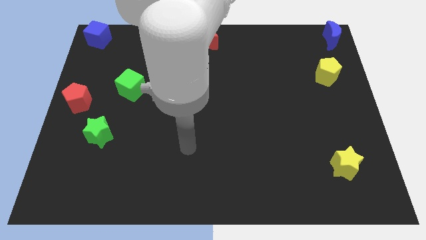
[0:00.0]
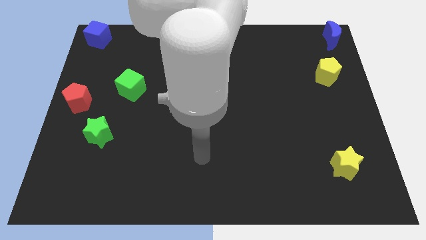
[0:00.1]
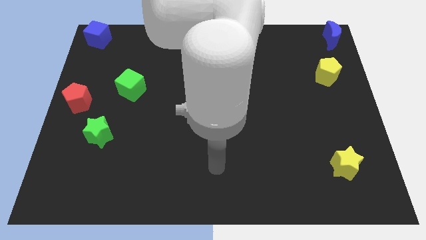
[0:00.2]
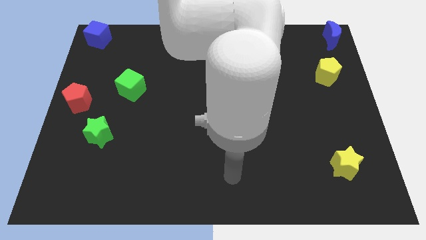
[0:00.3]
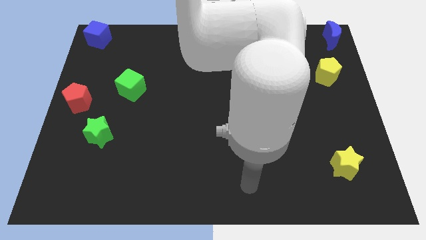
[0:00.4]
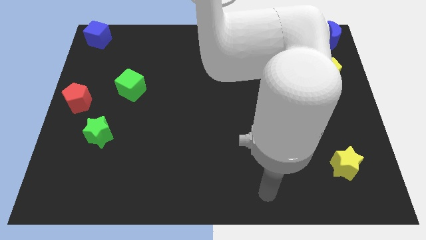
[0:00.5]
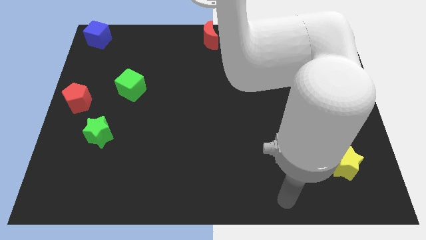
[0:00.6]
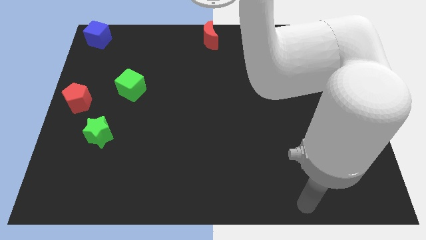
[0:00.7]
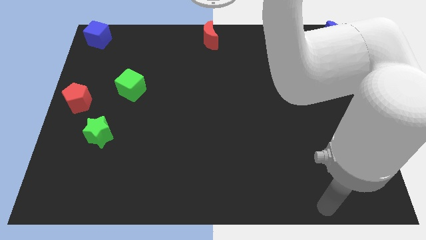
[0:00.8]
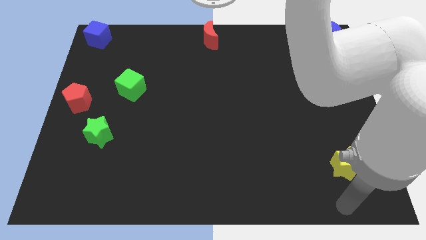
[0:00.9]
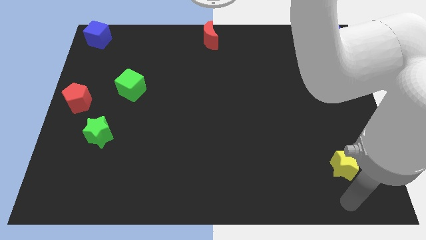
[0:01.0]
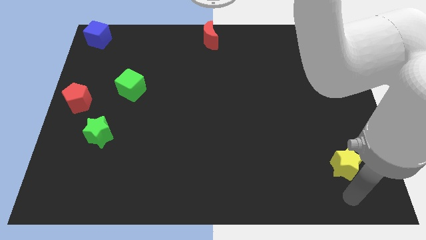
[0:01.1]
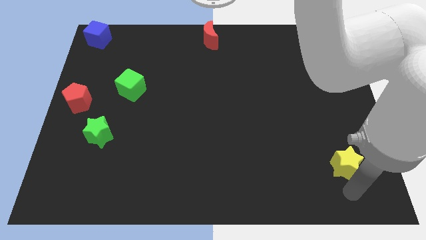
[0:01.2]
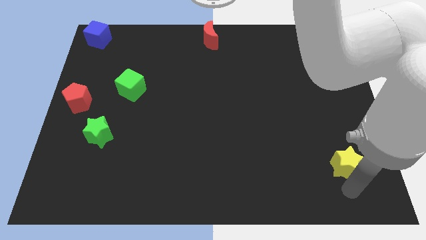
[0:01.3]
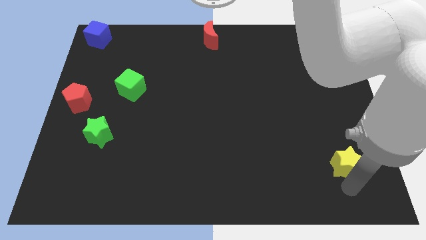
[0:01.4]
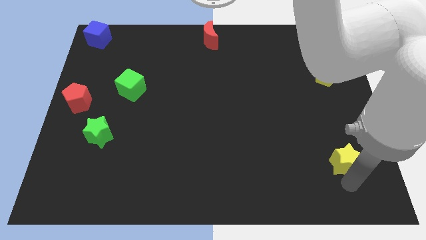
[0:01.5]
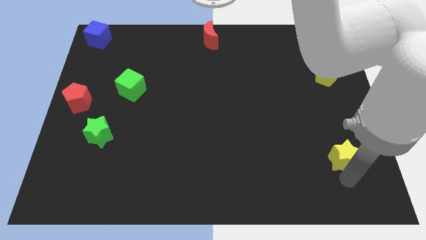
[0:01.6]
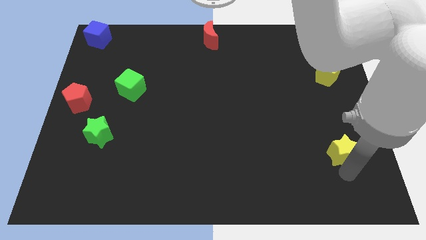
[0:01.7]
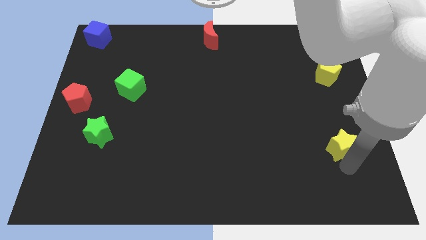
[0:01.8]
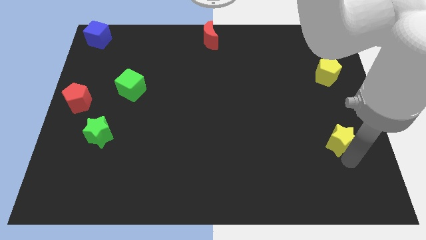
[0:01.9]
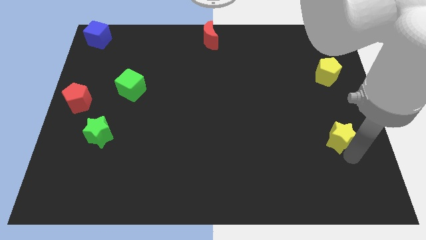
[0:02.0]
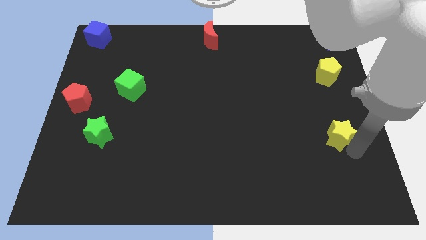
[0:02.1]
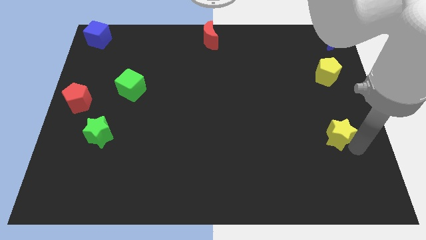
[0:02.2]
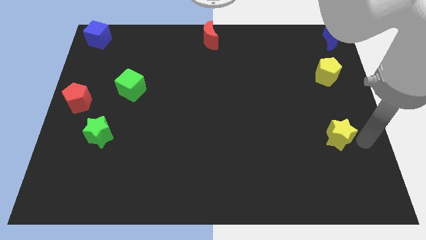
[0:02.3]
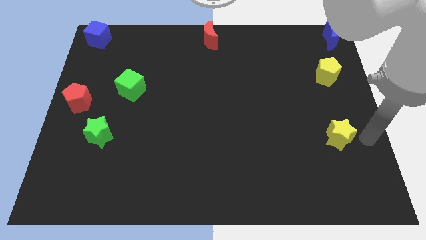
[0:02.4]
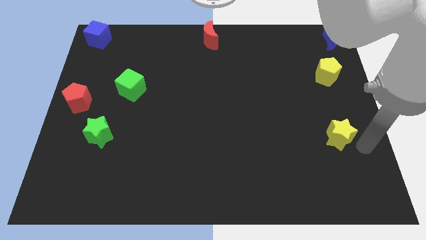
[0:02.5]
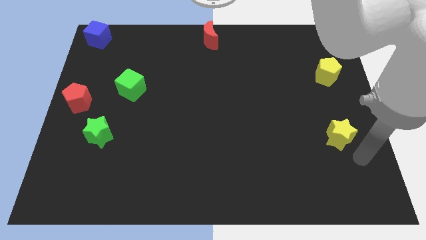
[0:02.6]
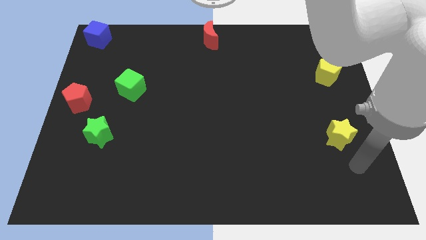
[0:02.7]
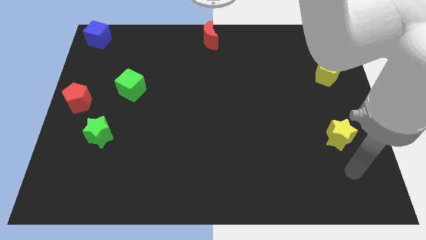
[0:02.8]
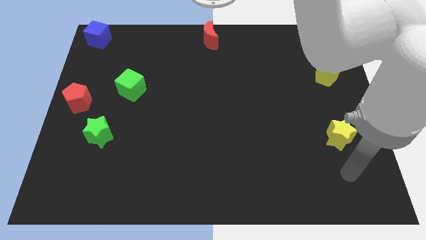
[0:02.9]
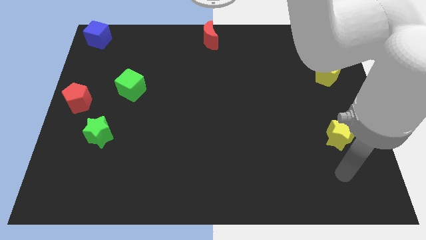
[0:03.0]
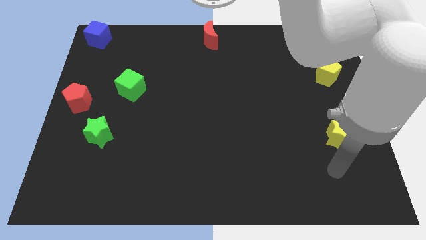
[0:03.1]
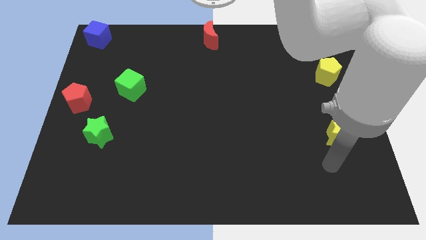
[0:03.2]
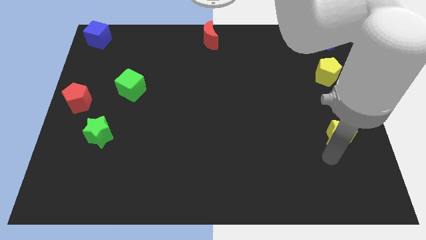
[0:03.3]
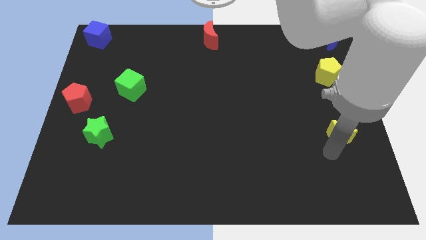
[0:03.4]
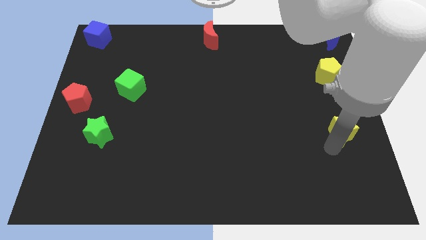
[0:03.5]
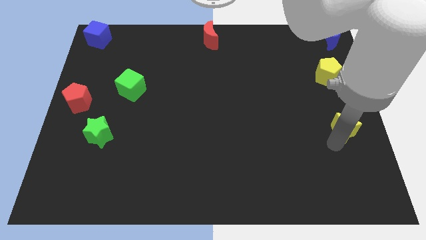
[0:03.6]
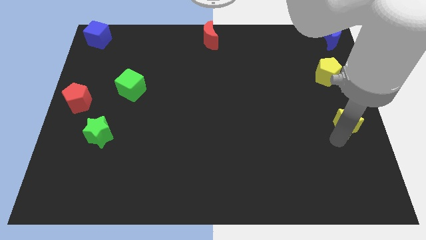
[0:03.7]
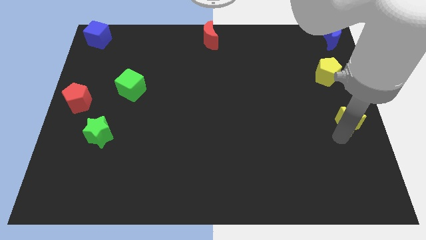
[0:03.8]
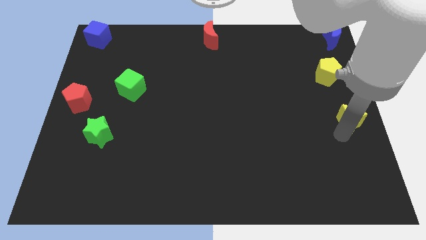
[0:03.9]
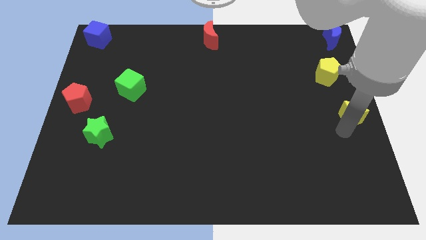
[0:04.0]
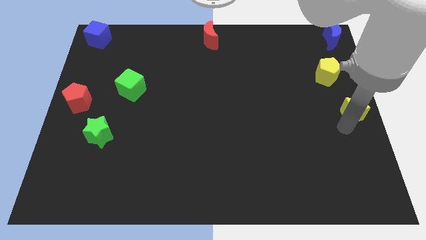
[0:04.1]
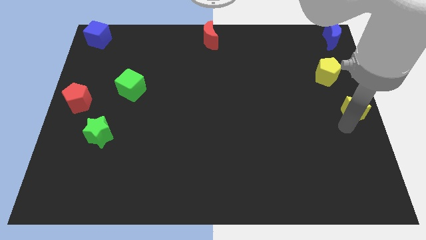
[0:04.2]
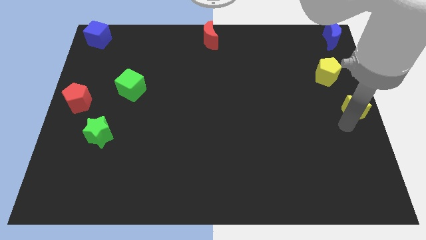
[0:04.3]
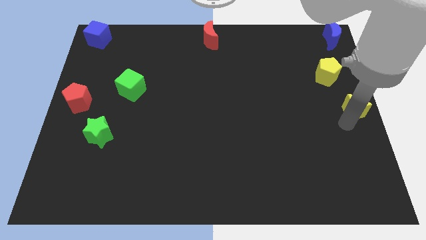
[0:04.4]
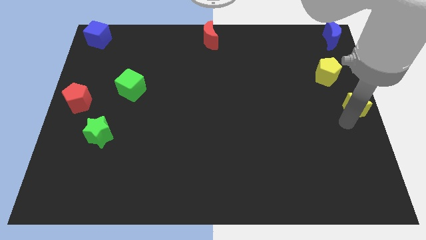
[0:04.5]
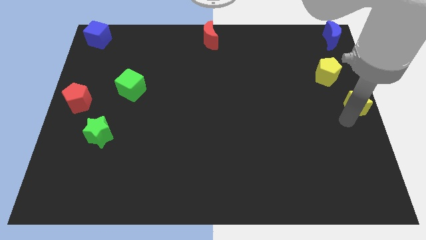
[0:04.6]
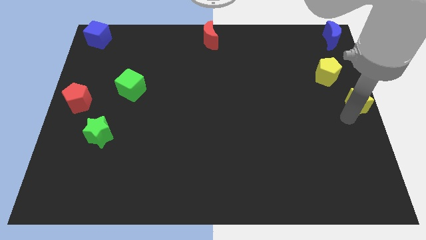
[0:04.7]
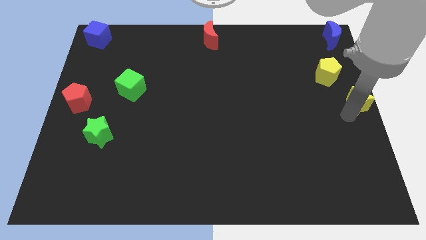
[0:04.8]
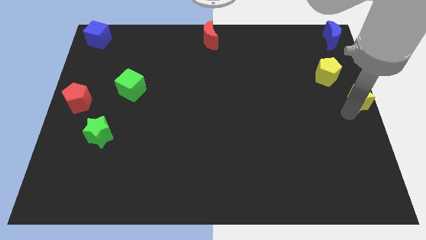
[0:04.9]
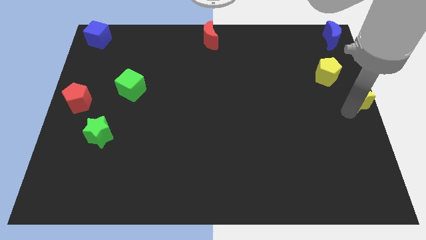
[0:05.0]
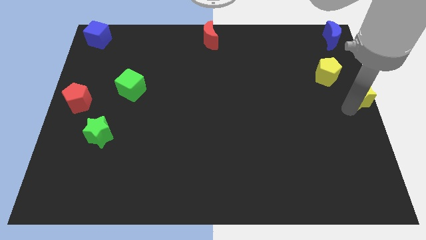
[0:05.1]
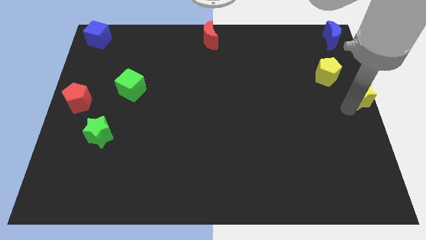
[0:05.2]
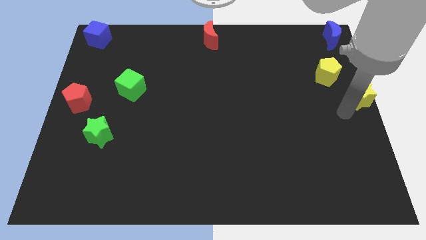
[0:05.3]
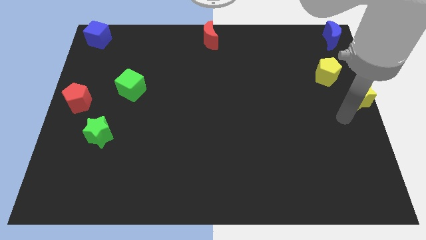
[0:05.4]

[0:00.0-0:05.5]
push the yellow star upward

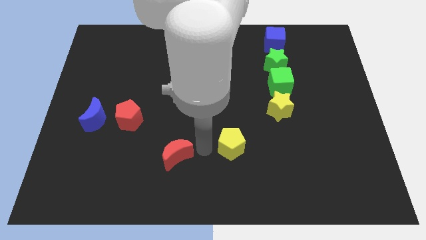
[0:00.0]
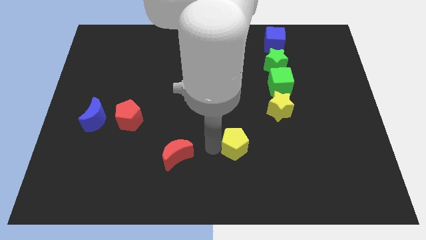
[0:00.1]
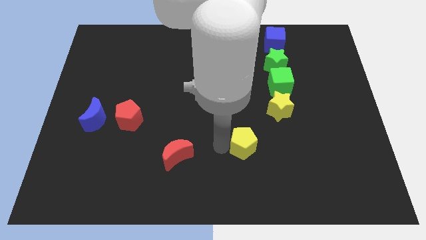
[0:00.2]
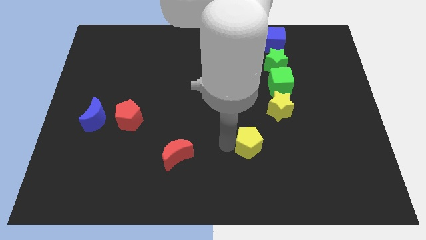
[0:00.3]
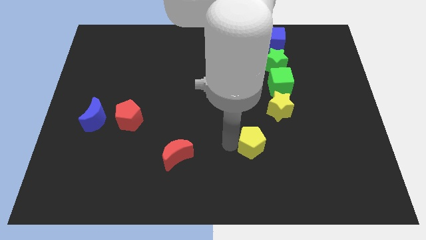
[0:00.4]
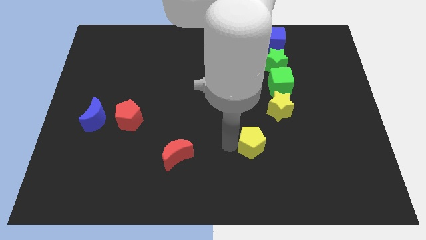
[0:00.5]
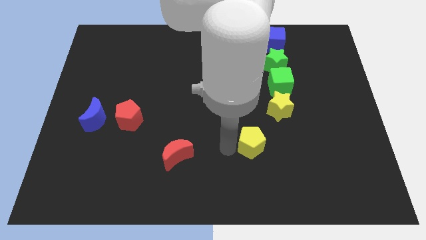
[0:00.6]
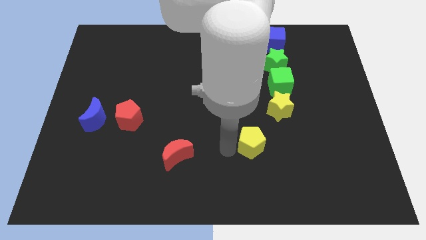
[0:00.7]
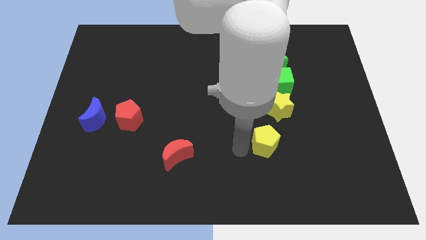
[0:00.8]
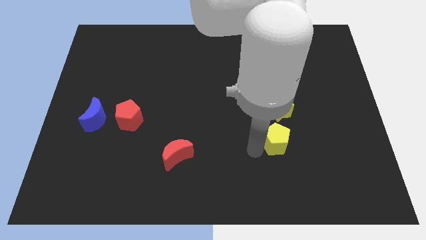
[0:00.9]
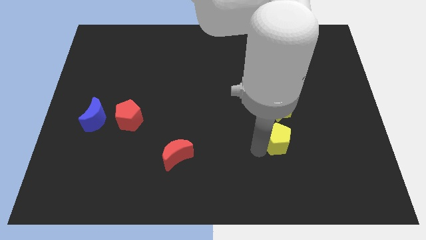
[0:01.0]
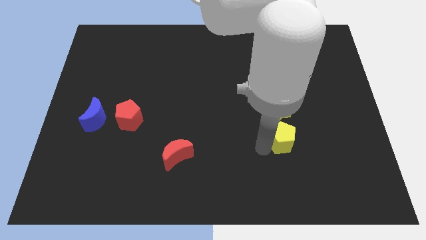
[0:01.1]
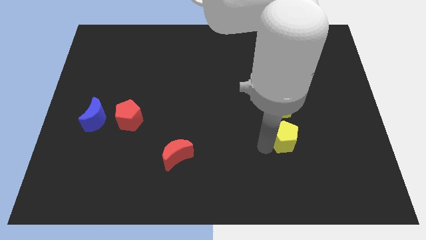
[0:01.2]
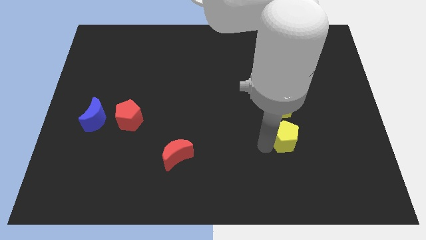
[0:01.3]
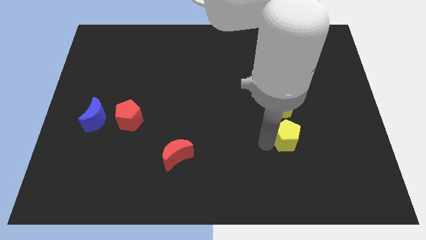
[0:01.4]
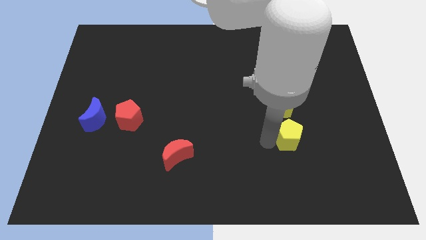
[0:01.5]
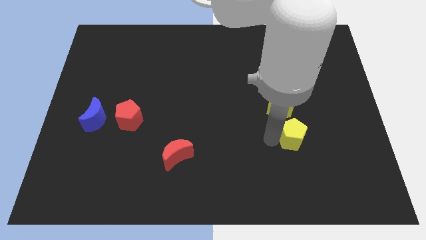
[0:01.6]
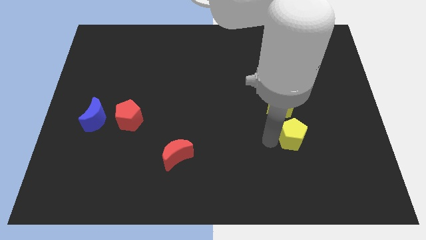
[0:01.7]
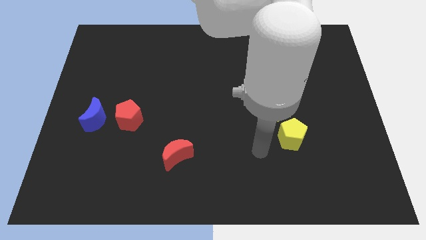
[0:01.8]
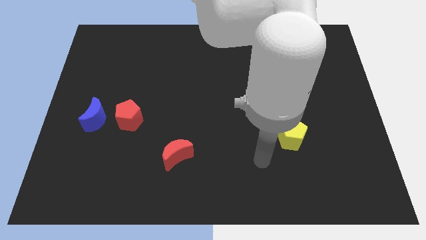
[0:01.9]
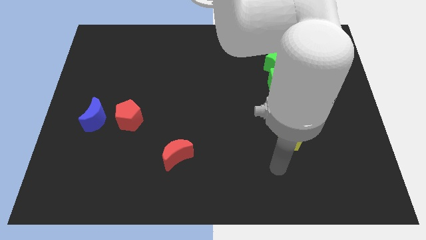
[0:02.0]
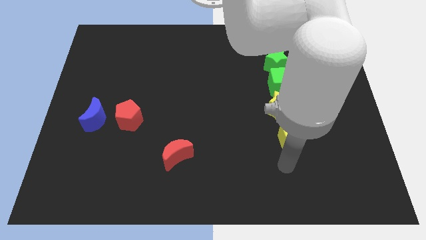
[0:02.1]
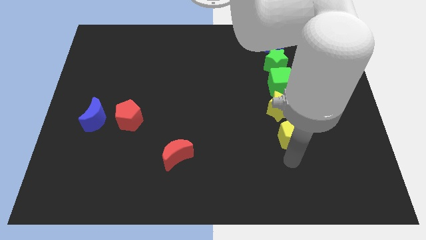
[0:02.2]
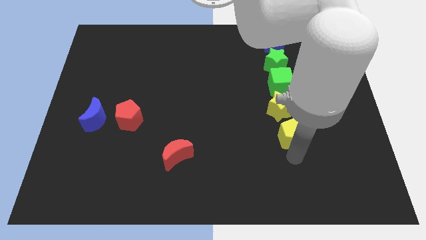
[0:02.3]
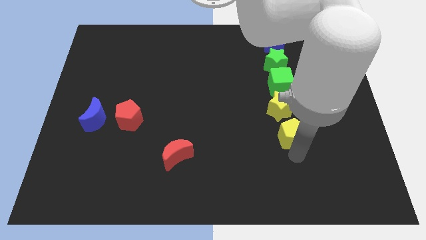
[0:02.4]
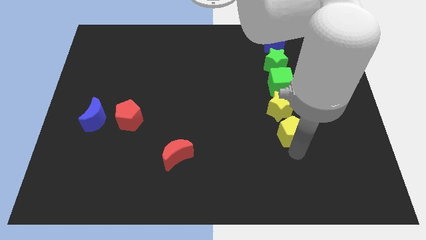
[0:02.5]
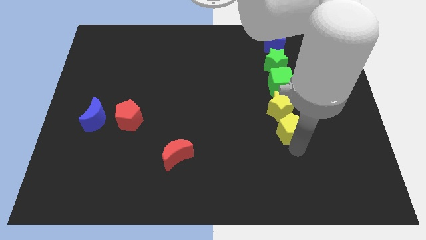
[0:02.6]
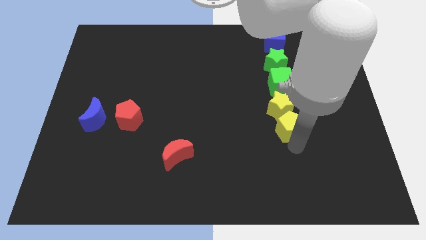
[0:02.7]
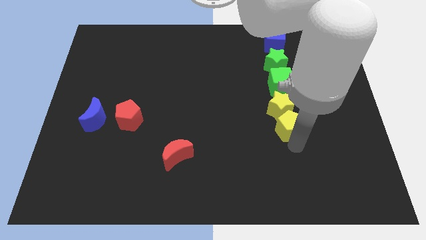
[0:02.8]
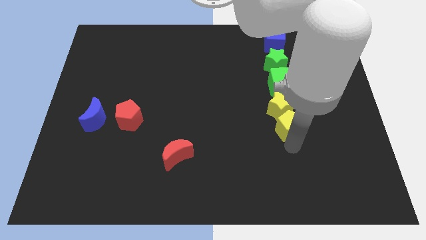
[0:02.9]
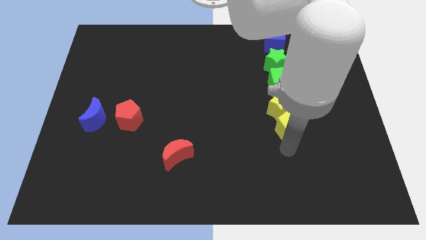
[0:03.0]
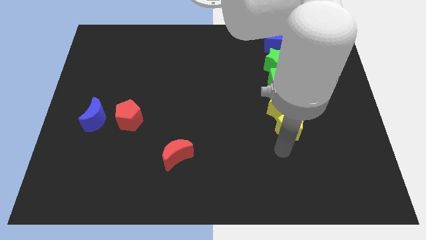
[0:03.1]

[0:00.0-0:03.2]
move yellow pentagon into yellow star

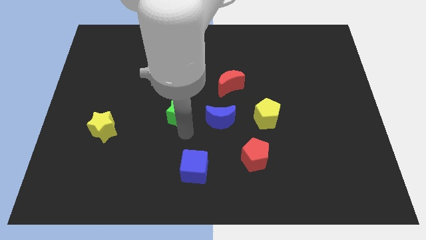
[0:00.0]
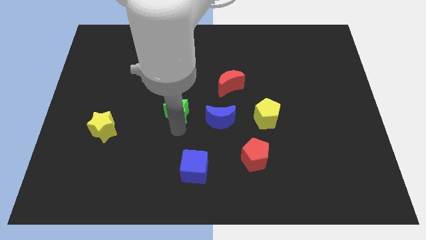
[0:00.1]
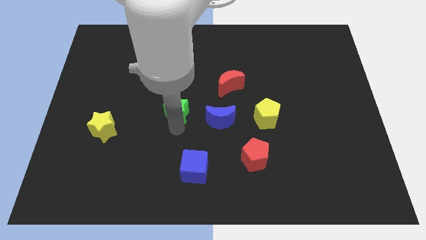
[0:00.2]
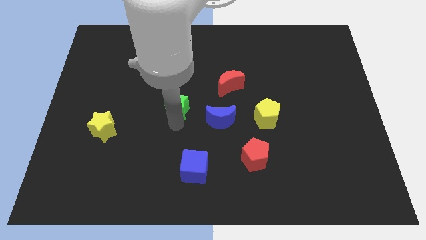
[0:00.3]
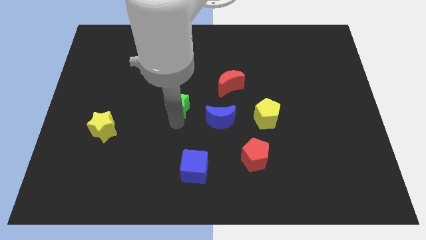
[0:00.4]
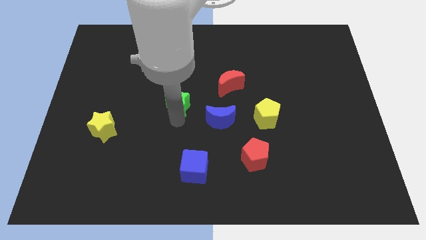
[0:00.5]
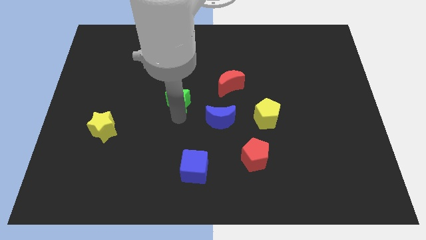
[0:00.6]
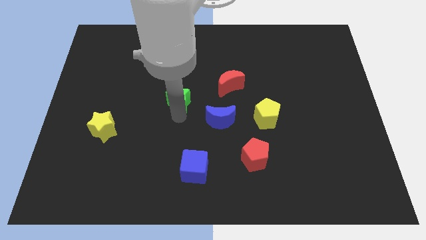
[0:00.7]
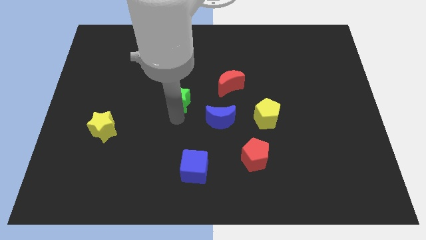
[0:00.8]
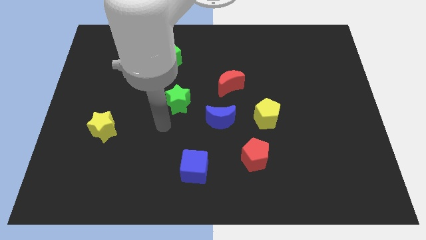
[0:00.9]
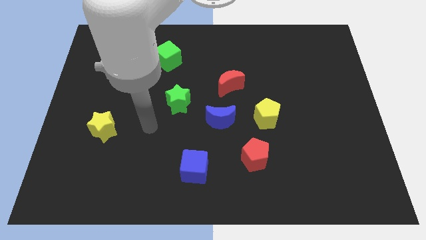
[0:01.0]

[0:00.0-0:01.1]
push the green star towards the top left side of the blue crescent
